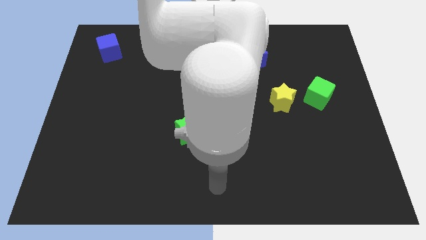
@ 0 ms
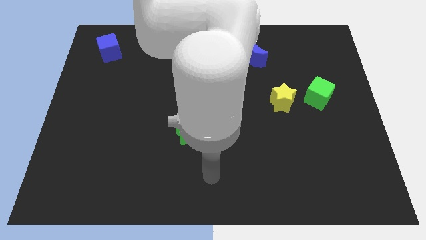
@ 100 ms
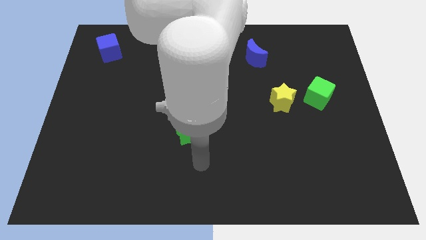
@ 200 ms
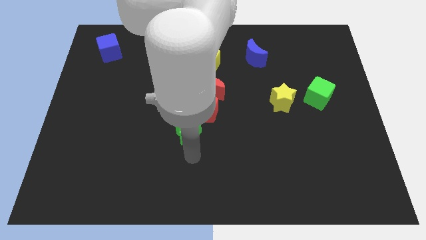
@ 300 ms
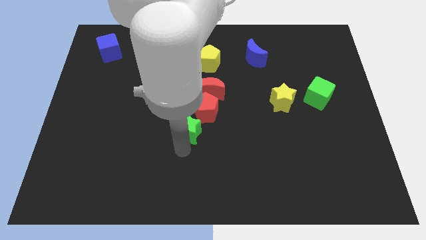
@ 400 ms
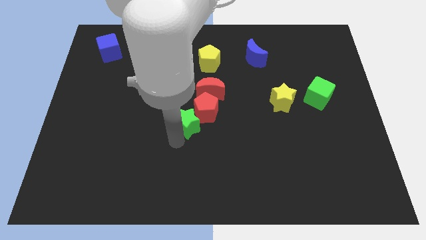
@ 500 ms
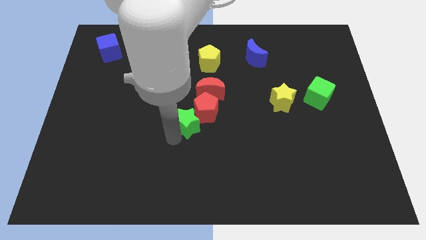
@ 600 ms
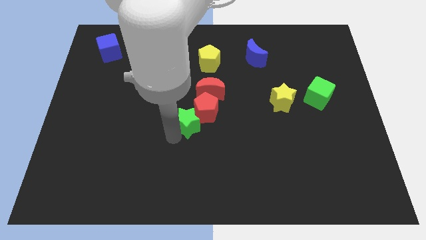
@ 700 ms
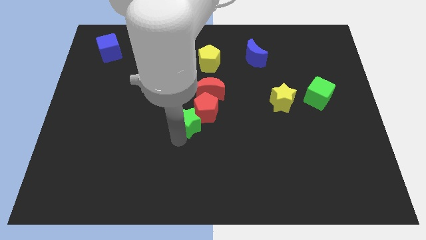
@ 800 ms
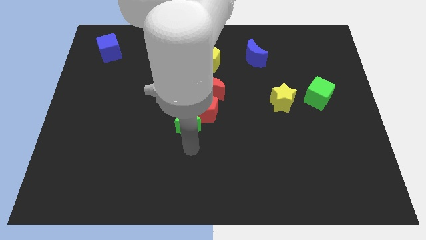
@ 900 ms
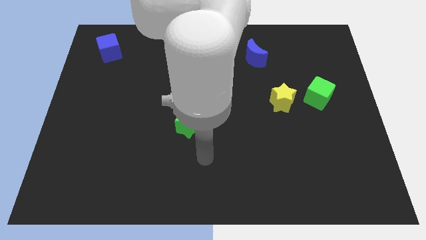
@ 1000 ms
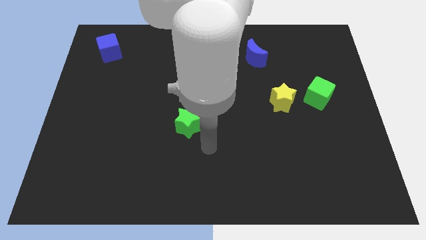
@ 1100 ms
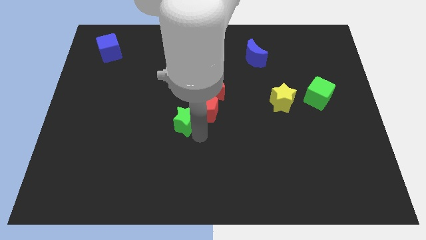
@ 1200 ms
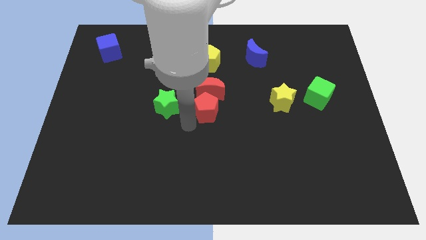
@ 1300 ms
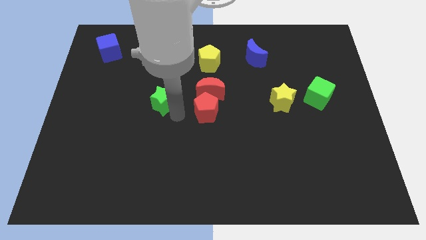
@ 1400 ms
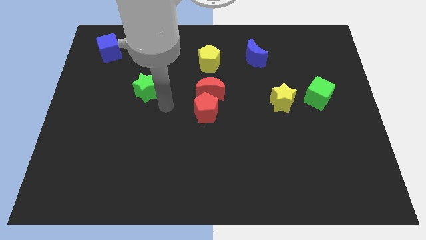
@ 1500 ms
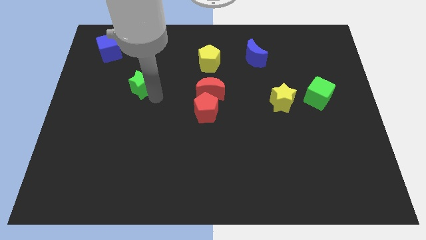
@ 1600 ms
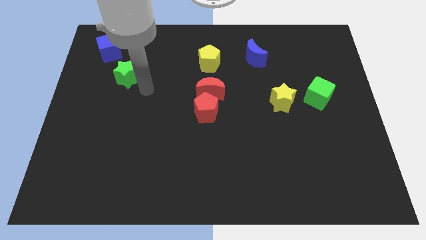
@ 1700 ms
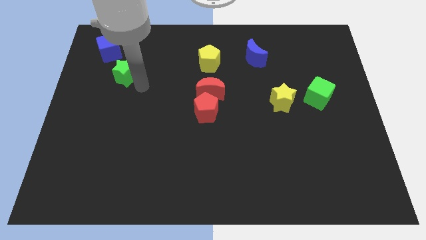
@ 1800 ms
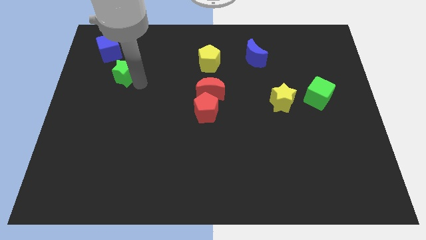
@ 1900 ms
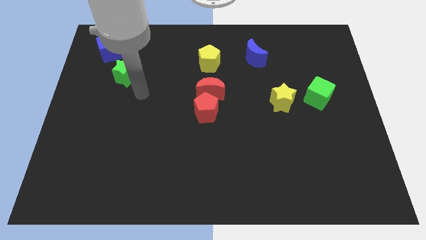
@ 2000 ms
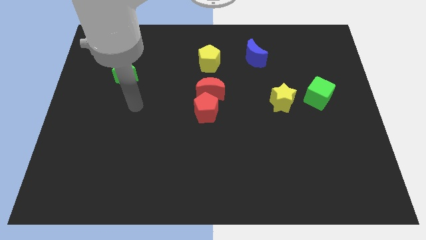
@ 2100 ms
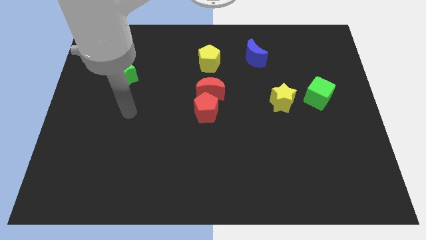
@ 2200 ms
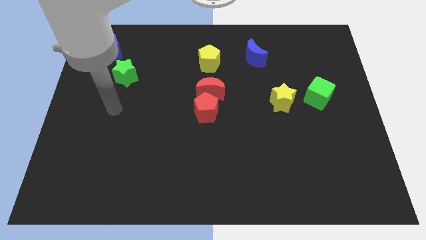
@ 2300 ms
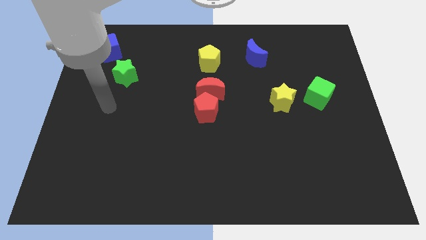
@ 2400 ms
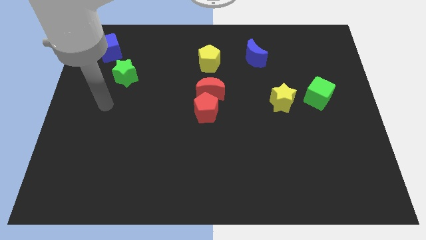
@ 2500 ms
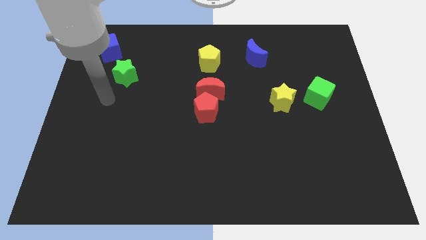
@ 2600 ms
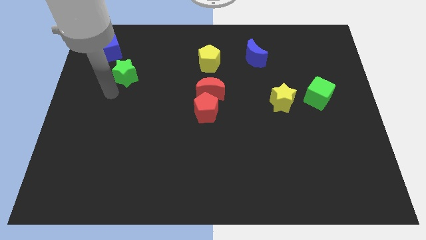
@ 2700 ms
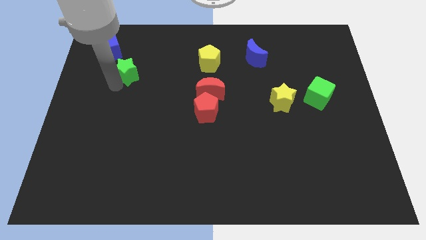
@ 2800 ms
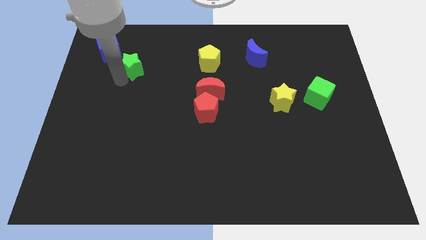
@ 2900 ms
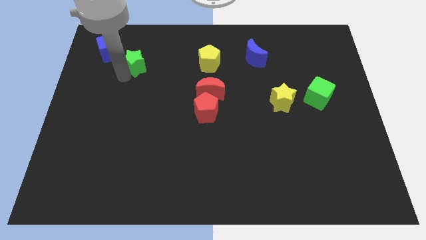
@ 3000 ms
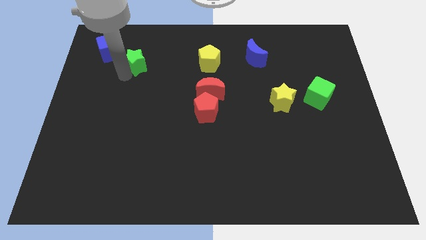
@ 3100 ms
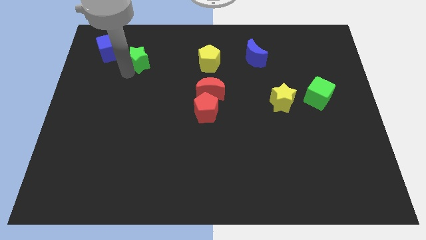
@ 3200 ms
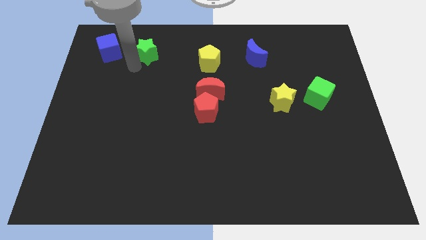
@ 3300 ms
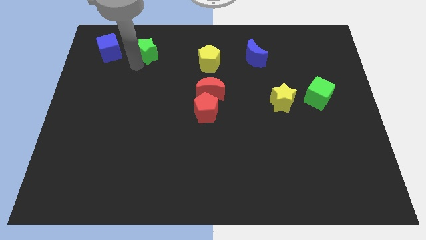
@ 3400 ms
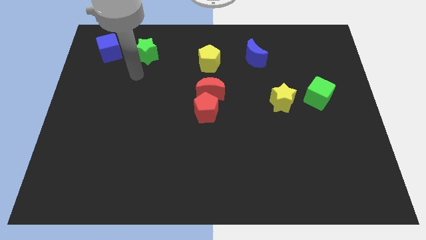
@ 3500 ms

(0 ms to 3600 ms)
place the green star right to the blue cube

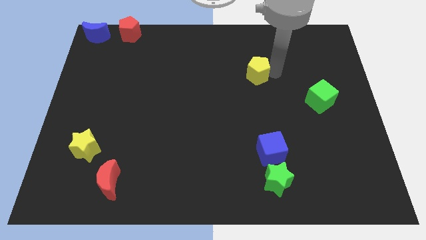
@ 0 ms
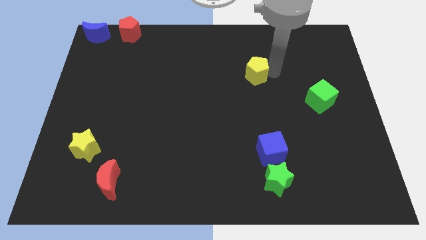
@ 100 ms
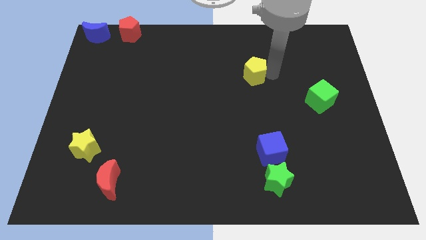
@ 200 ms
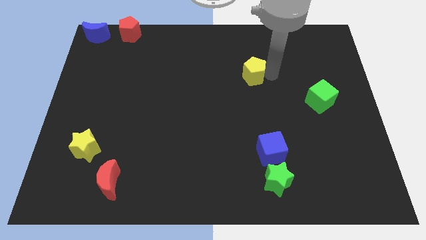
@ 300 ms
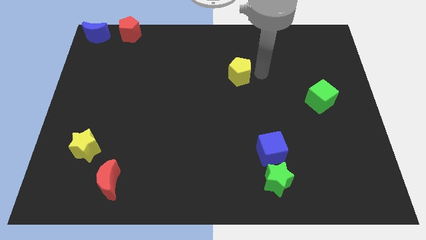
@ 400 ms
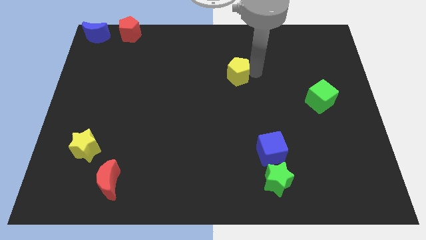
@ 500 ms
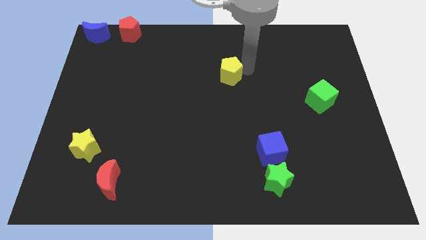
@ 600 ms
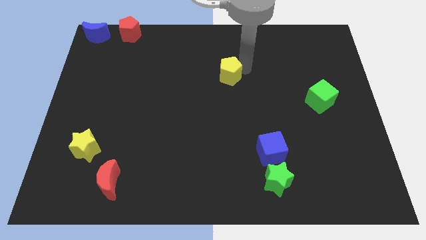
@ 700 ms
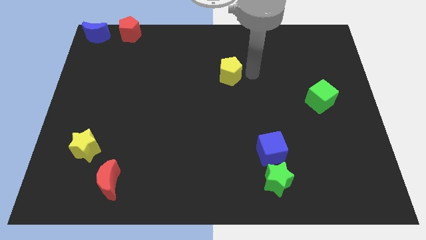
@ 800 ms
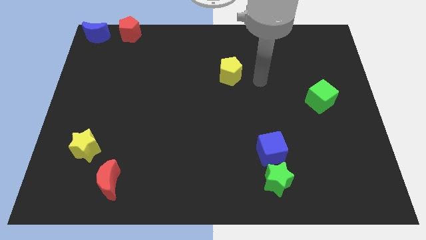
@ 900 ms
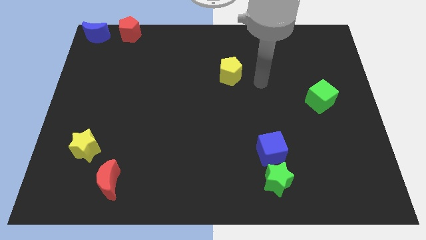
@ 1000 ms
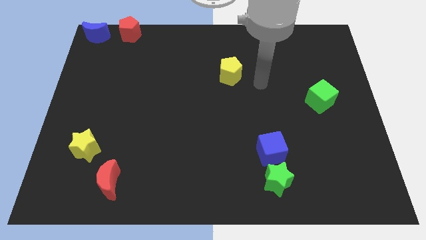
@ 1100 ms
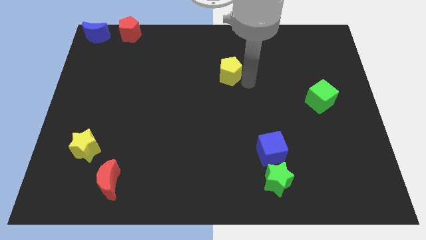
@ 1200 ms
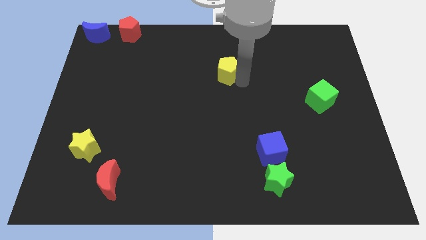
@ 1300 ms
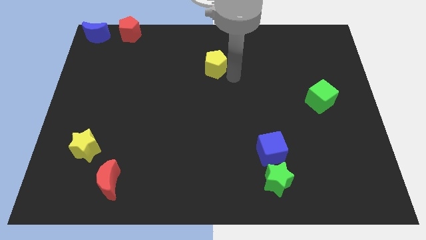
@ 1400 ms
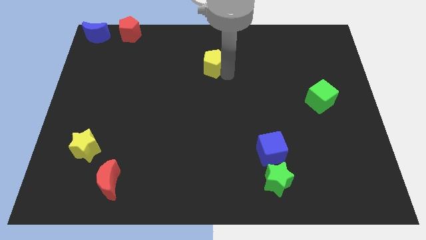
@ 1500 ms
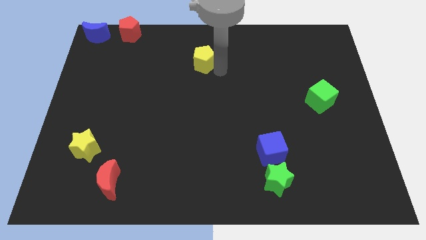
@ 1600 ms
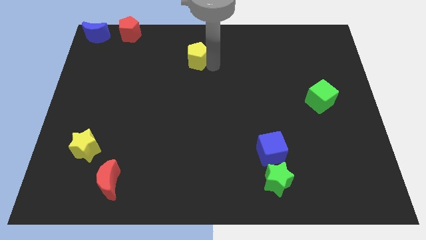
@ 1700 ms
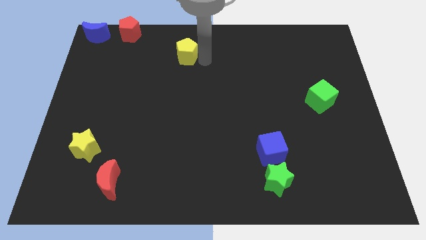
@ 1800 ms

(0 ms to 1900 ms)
drag the yellow pentagon to the top left

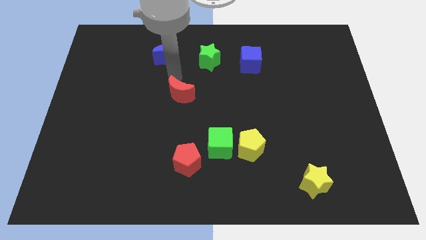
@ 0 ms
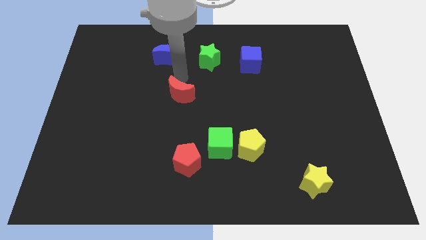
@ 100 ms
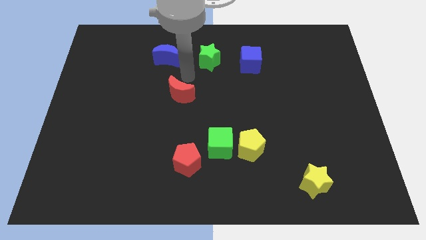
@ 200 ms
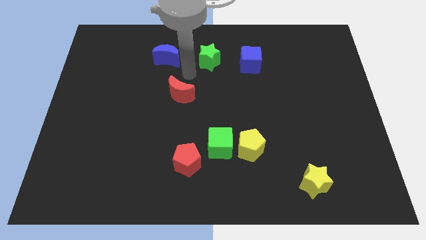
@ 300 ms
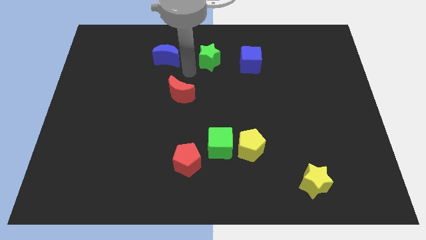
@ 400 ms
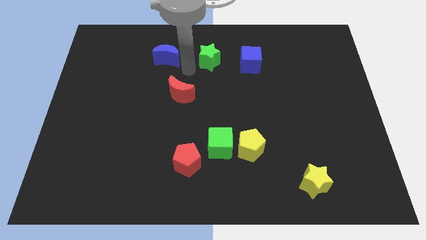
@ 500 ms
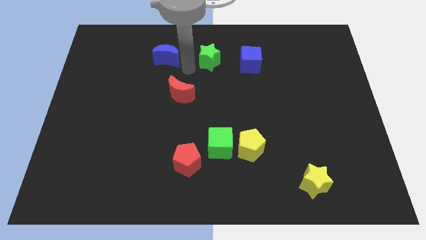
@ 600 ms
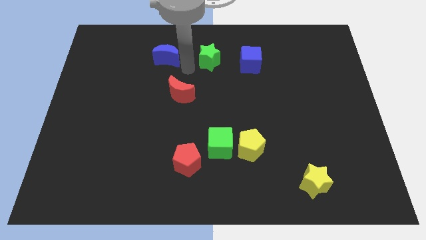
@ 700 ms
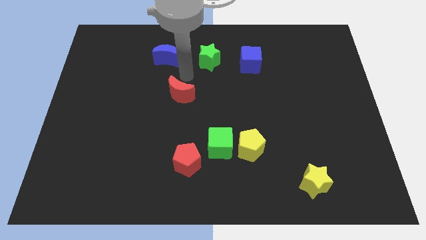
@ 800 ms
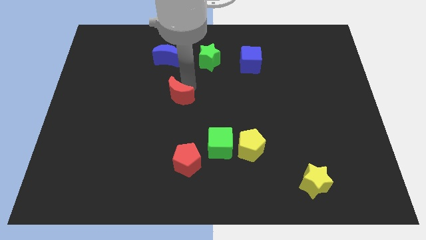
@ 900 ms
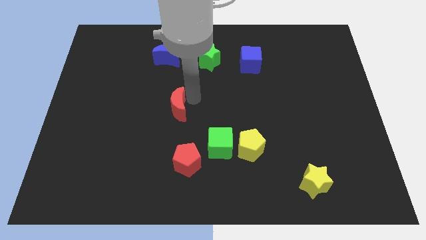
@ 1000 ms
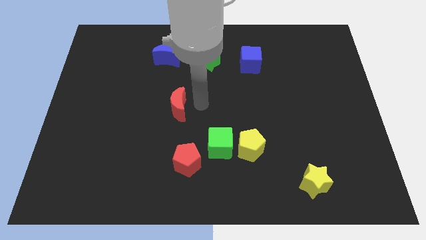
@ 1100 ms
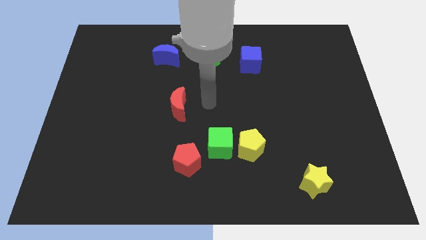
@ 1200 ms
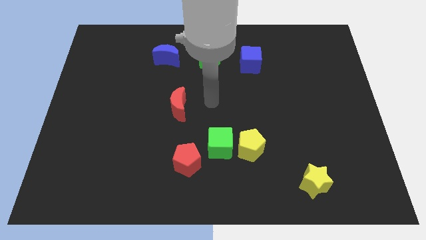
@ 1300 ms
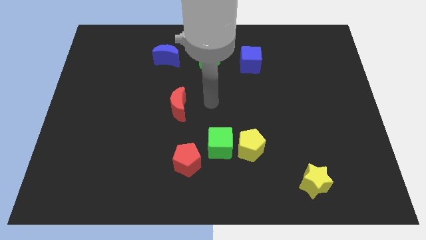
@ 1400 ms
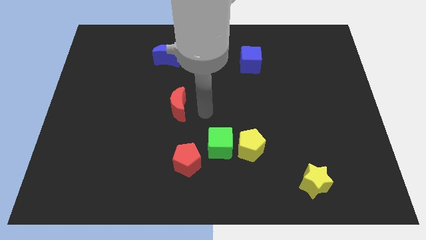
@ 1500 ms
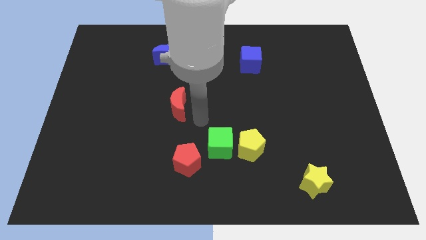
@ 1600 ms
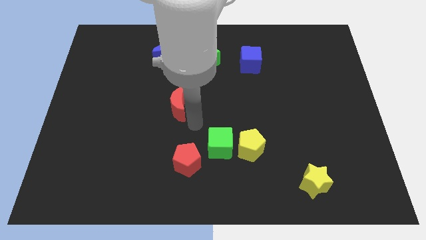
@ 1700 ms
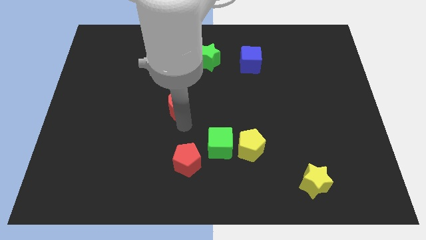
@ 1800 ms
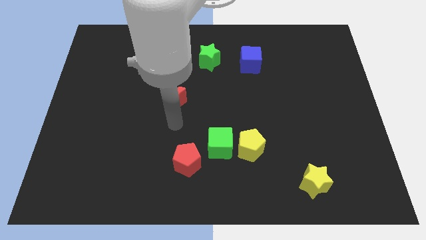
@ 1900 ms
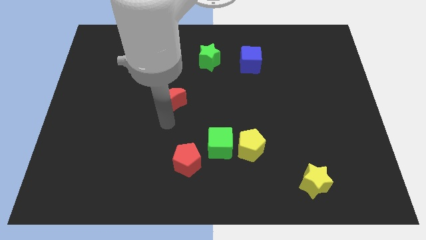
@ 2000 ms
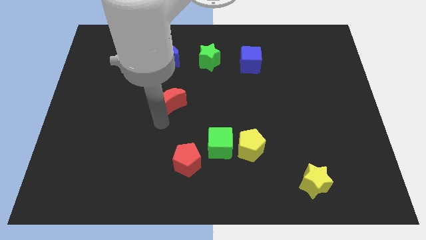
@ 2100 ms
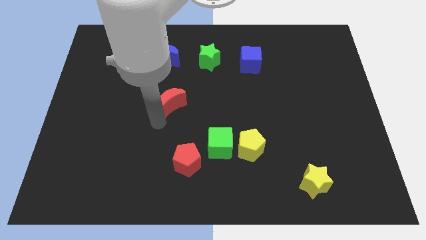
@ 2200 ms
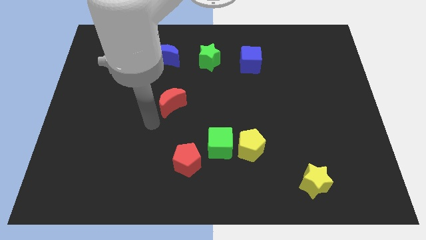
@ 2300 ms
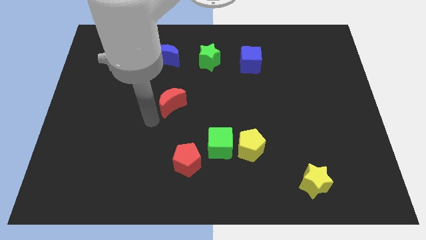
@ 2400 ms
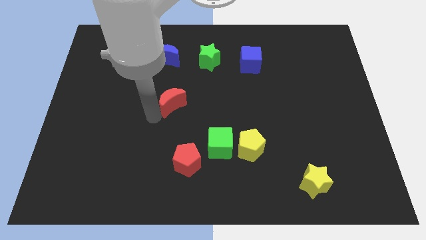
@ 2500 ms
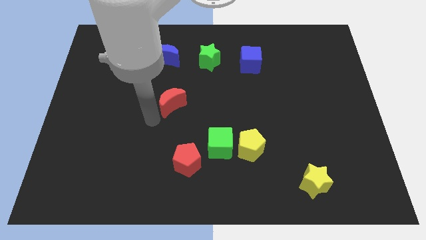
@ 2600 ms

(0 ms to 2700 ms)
move the red moon above the red pentagon

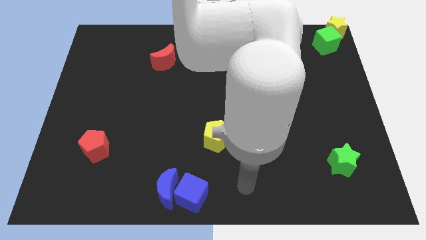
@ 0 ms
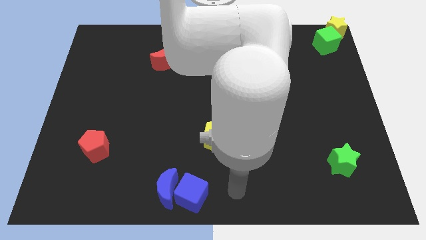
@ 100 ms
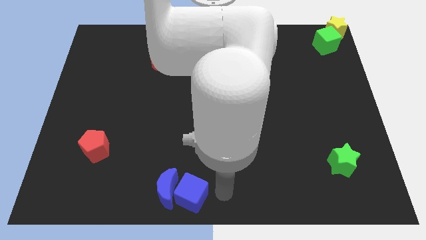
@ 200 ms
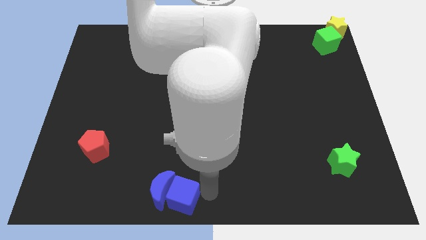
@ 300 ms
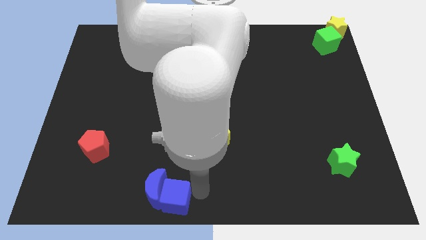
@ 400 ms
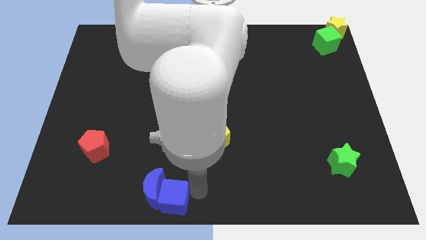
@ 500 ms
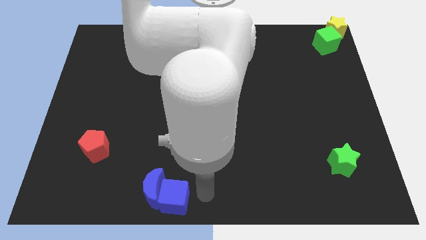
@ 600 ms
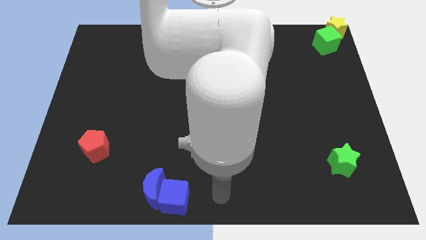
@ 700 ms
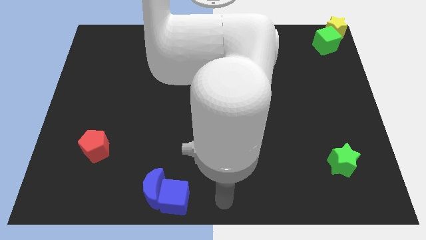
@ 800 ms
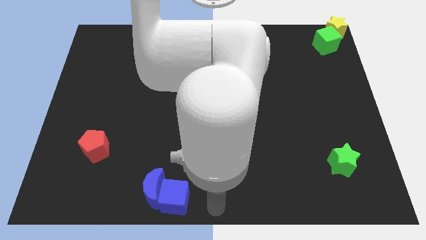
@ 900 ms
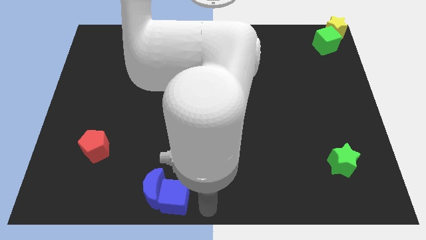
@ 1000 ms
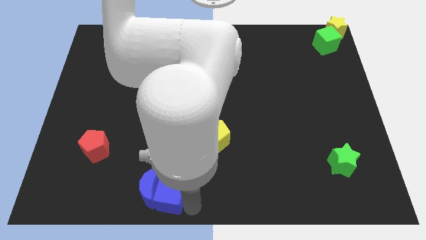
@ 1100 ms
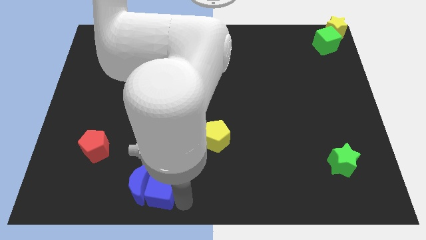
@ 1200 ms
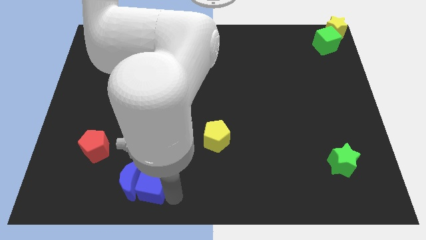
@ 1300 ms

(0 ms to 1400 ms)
push the blue blocks slightly to the left
